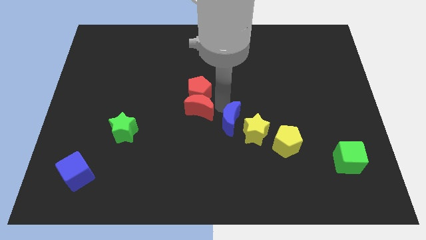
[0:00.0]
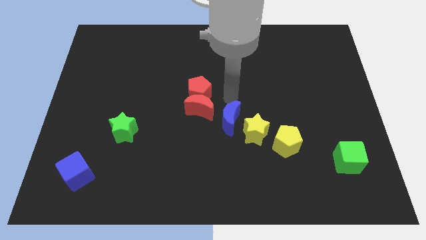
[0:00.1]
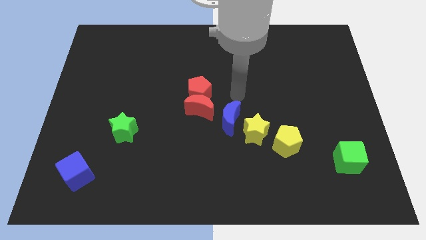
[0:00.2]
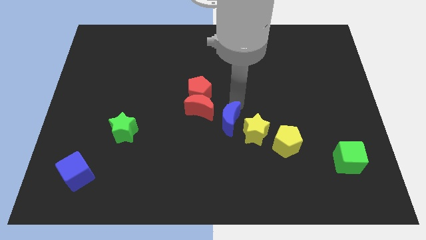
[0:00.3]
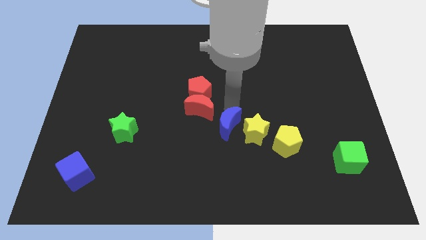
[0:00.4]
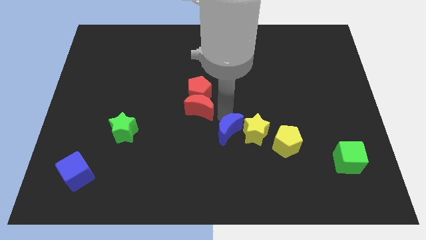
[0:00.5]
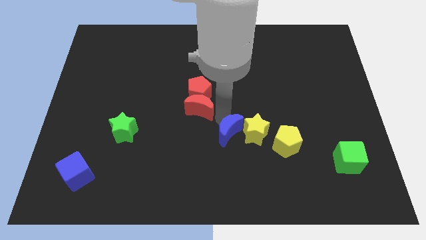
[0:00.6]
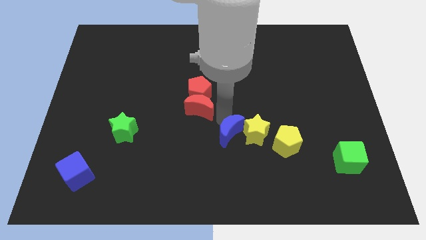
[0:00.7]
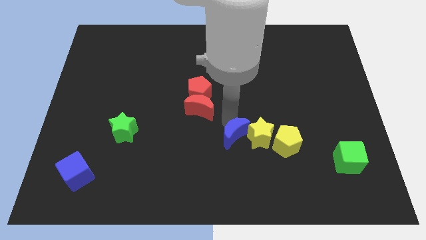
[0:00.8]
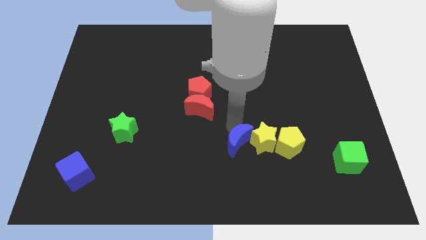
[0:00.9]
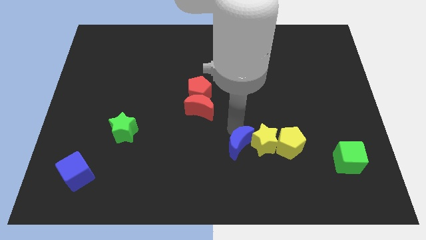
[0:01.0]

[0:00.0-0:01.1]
move the blue crescent into the yellow star

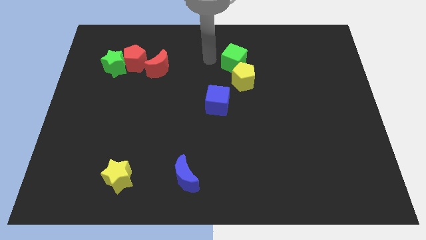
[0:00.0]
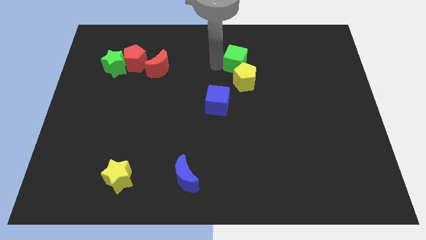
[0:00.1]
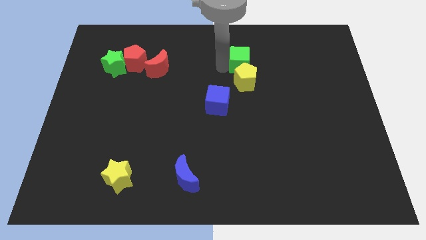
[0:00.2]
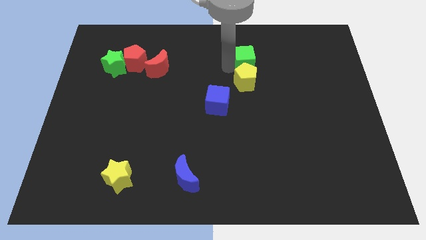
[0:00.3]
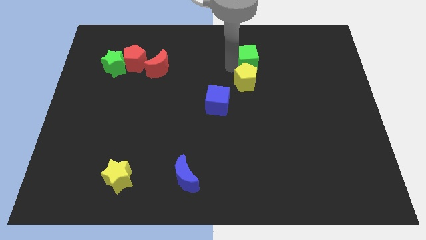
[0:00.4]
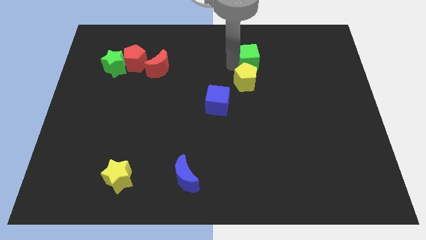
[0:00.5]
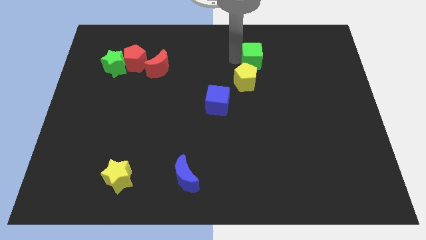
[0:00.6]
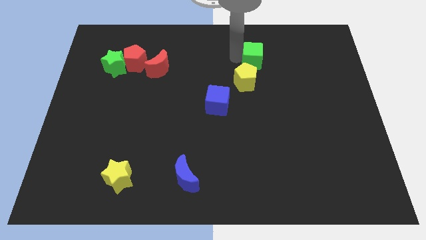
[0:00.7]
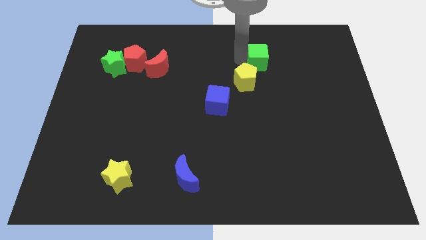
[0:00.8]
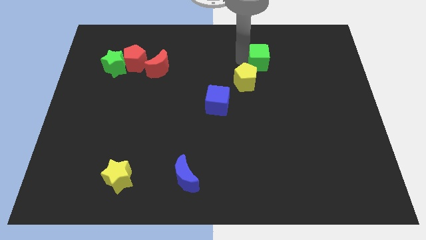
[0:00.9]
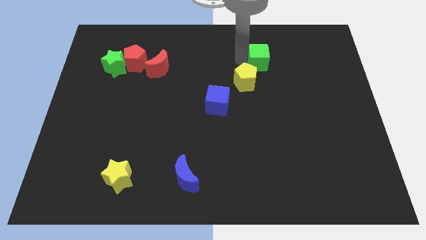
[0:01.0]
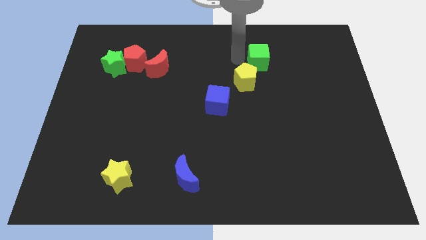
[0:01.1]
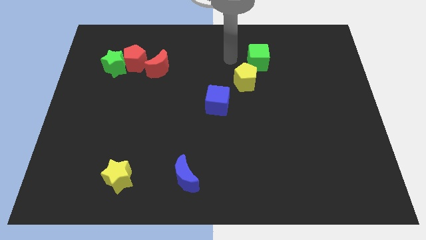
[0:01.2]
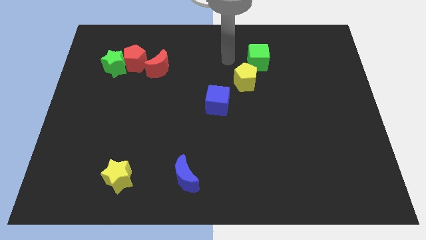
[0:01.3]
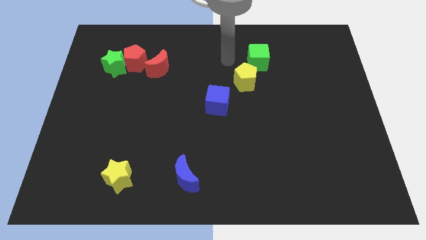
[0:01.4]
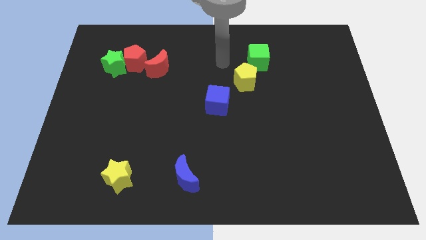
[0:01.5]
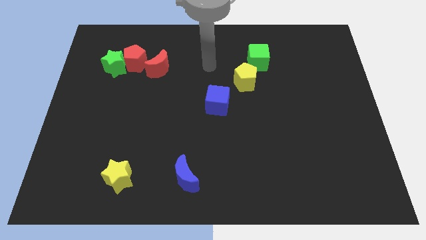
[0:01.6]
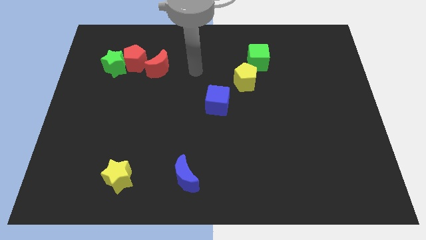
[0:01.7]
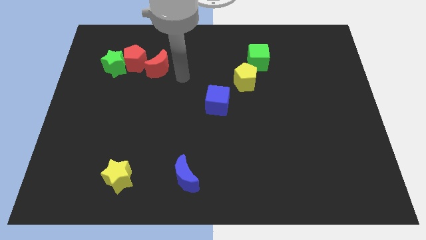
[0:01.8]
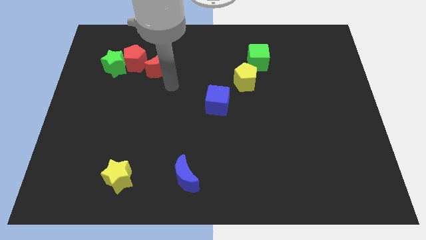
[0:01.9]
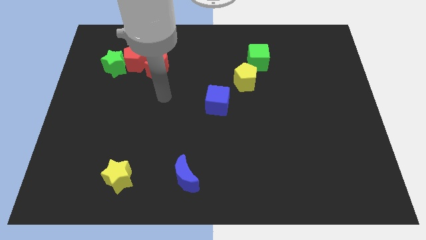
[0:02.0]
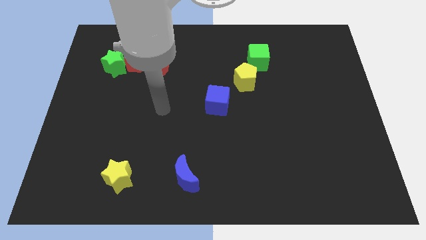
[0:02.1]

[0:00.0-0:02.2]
push green cube not exactly above the yellow pentagon

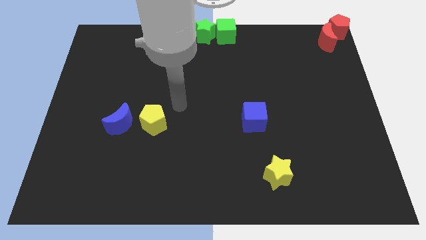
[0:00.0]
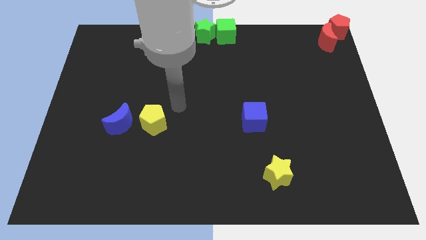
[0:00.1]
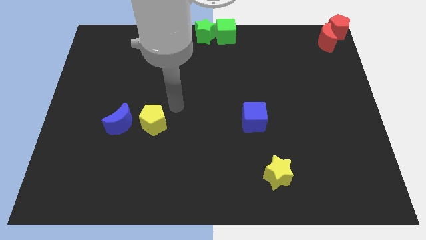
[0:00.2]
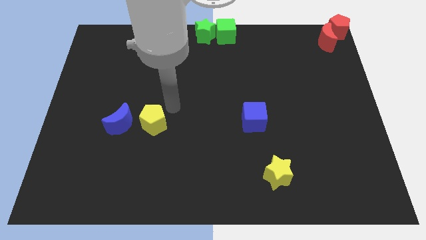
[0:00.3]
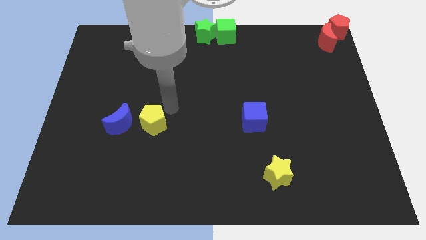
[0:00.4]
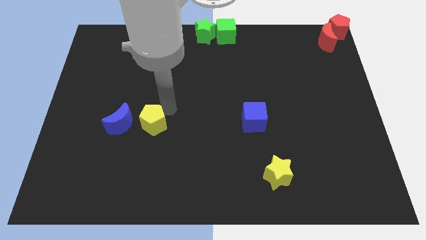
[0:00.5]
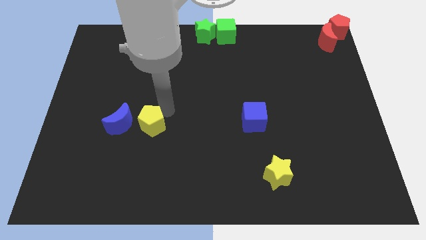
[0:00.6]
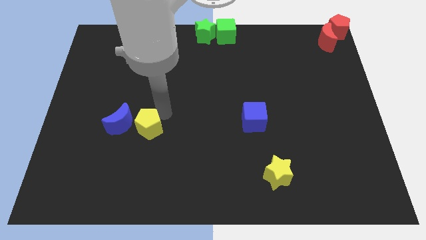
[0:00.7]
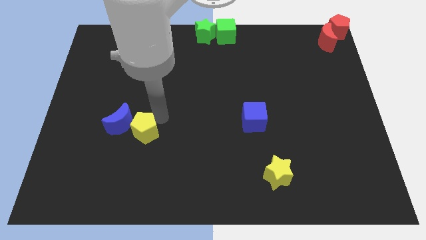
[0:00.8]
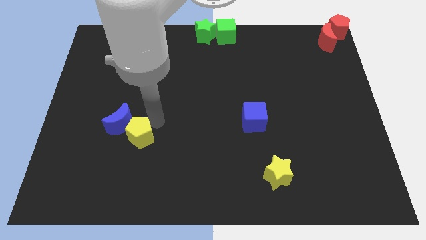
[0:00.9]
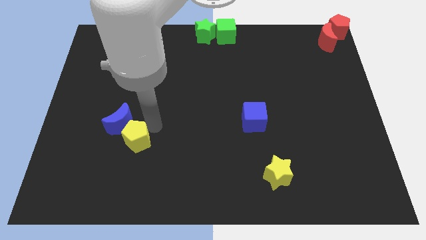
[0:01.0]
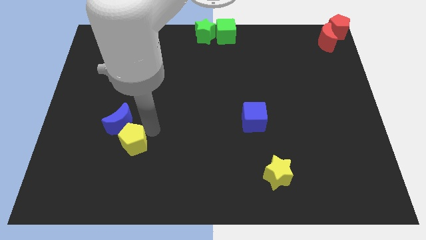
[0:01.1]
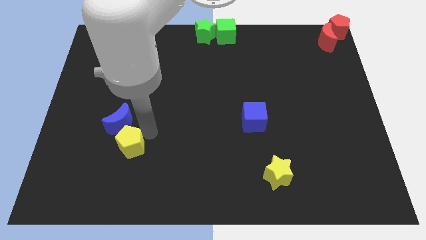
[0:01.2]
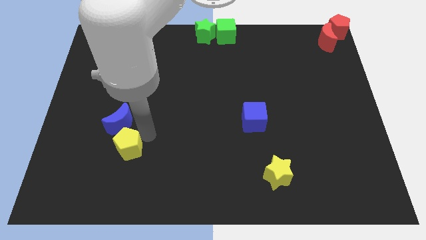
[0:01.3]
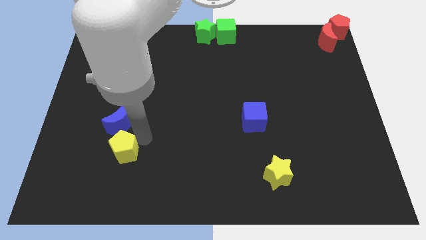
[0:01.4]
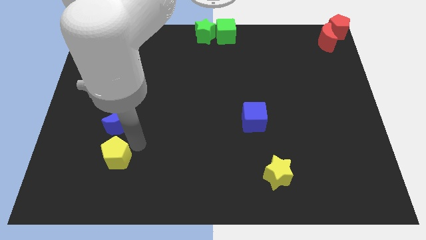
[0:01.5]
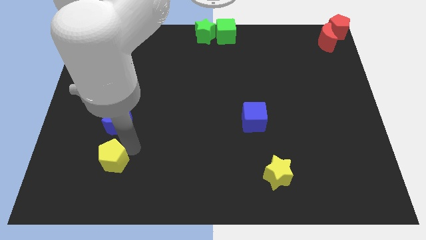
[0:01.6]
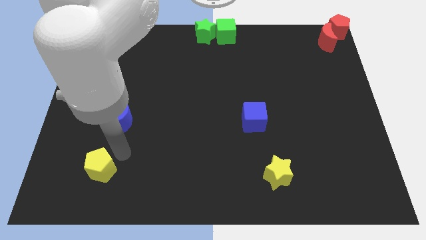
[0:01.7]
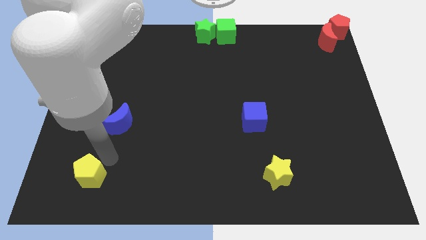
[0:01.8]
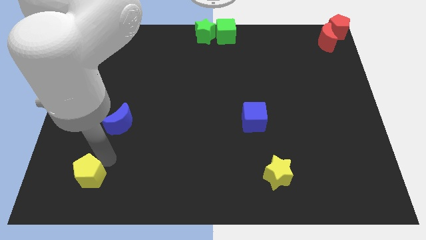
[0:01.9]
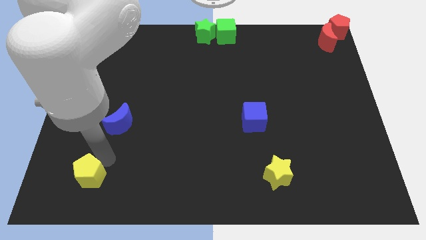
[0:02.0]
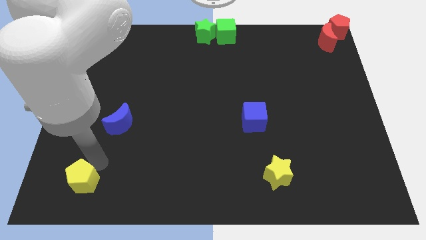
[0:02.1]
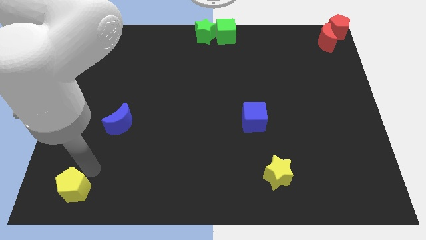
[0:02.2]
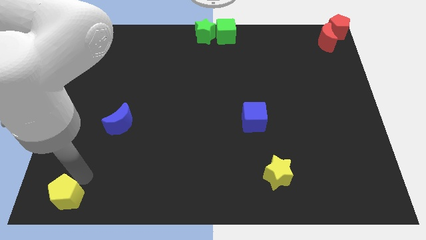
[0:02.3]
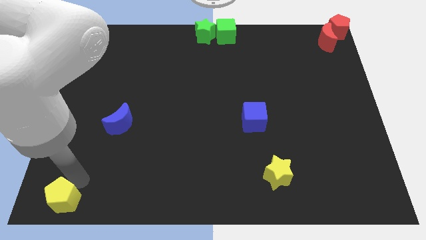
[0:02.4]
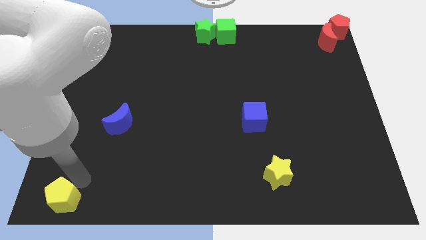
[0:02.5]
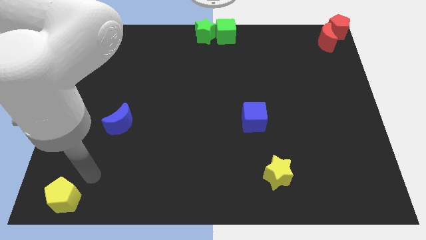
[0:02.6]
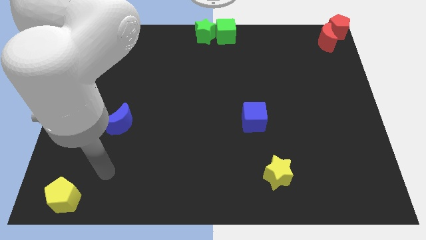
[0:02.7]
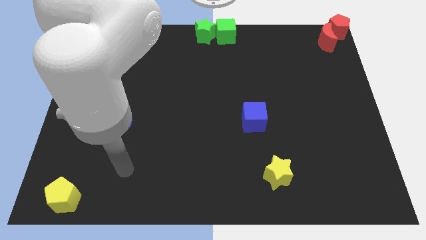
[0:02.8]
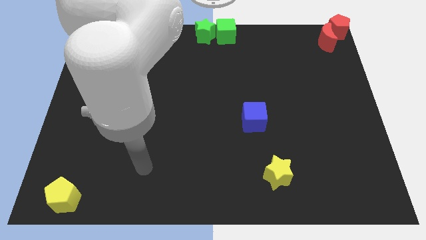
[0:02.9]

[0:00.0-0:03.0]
separate yellow pentagon from blue crescent

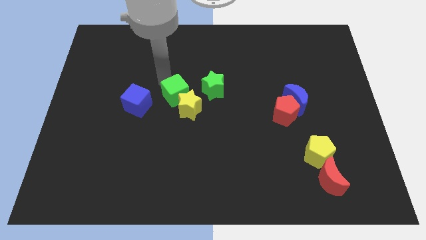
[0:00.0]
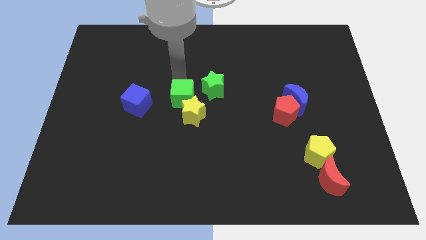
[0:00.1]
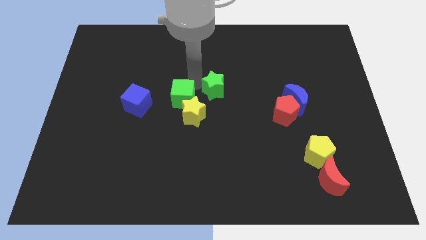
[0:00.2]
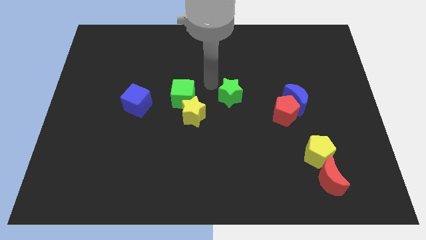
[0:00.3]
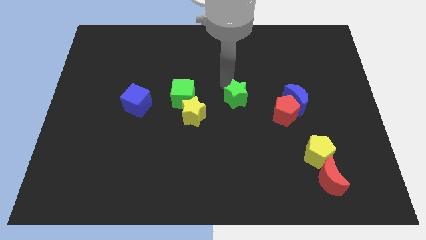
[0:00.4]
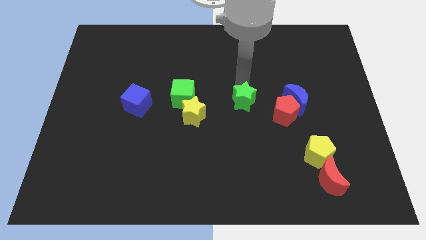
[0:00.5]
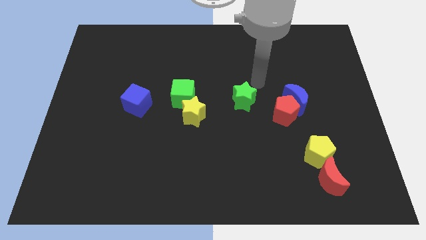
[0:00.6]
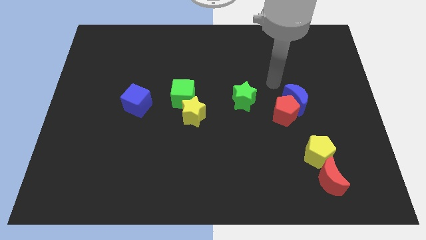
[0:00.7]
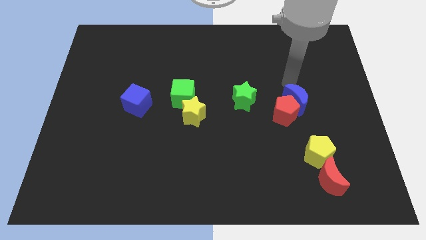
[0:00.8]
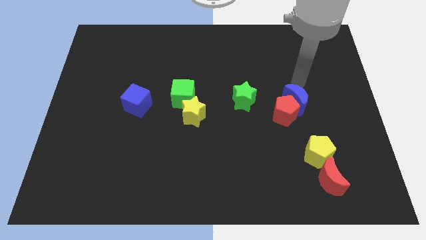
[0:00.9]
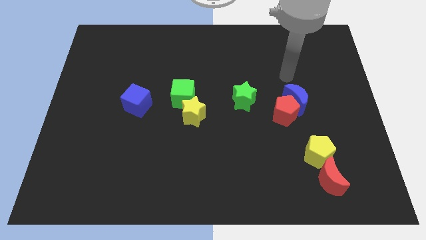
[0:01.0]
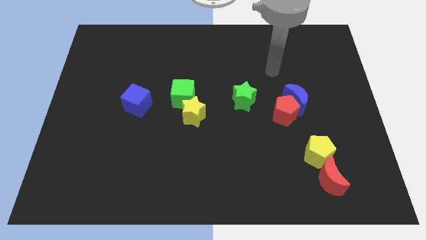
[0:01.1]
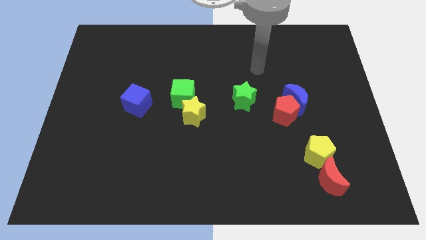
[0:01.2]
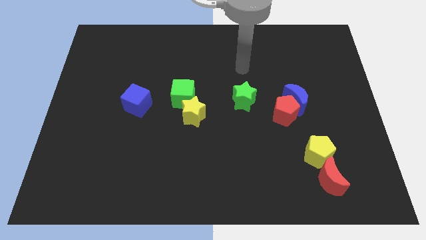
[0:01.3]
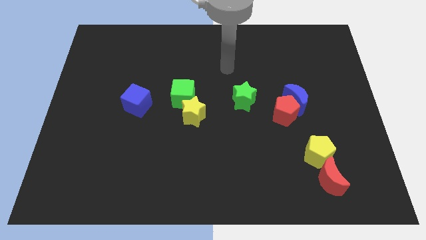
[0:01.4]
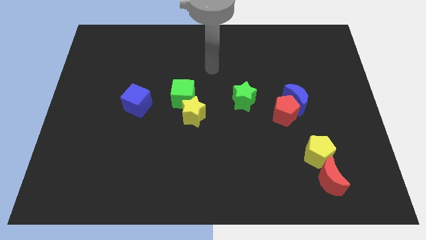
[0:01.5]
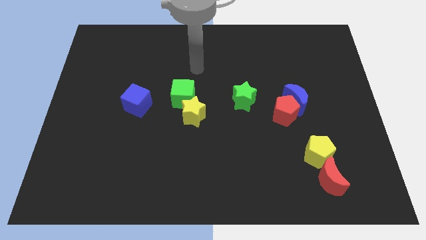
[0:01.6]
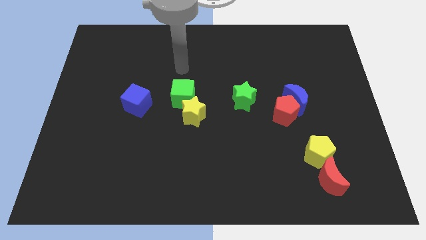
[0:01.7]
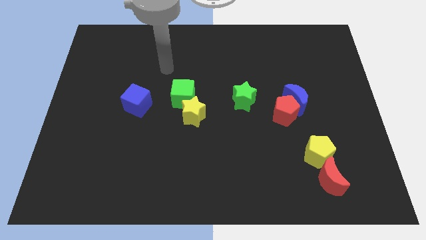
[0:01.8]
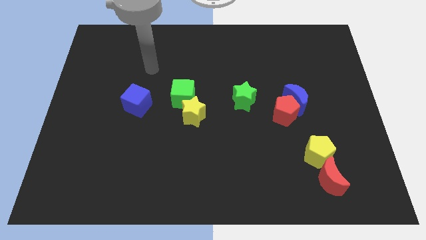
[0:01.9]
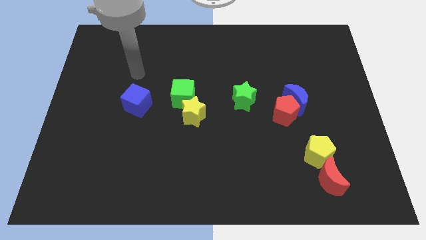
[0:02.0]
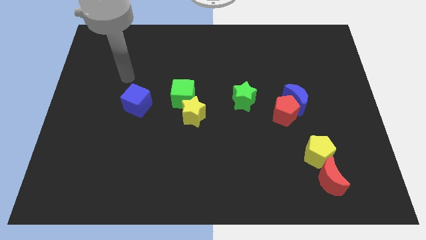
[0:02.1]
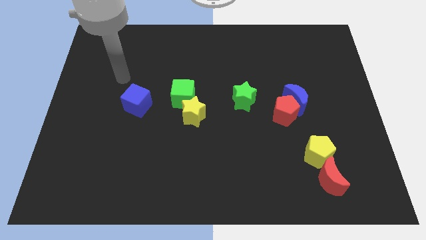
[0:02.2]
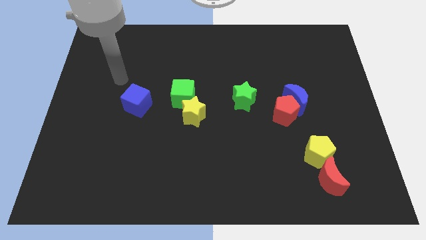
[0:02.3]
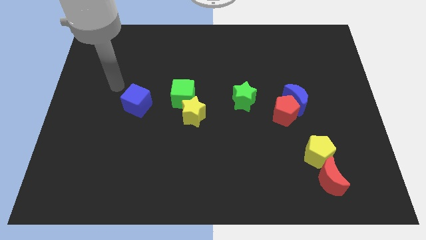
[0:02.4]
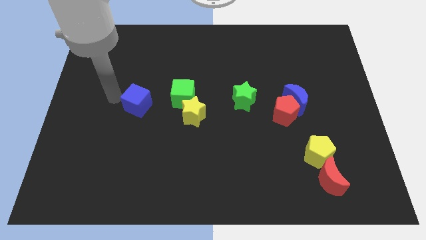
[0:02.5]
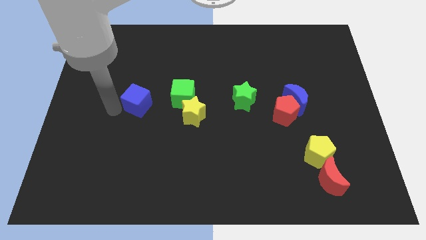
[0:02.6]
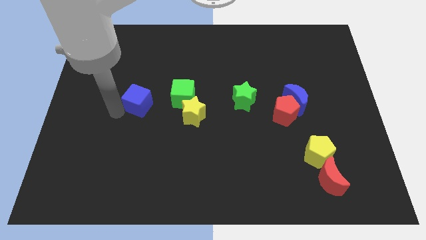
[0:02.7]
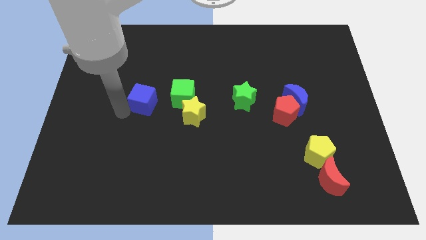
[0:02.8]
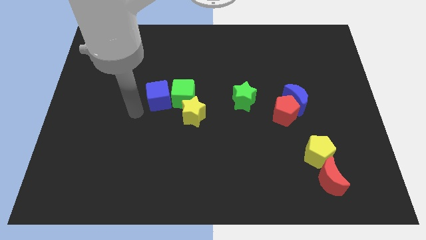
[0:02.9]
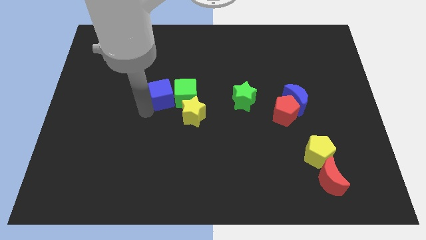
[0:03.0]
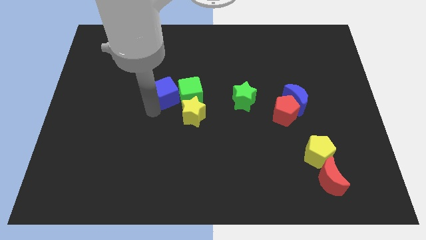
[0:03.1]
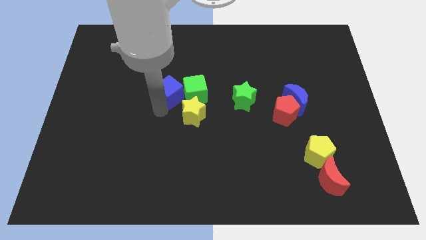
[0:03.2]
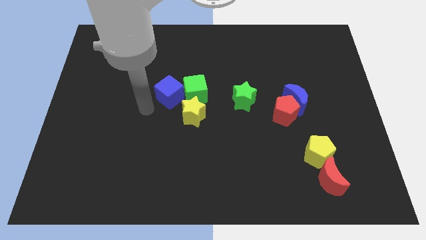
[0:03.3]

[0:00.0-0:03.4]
push the blue cube into green cube
